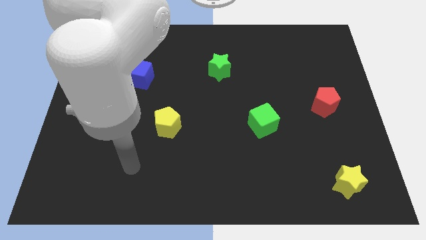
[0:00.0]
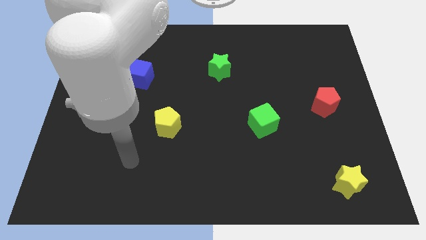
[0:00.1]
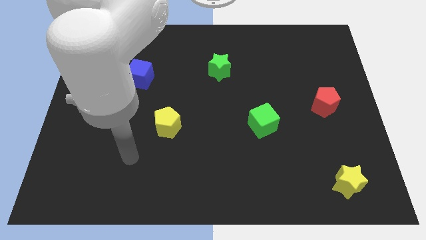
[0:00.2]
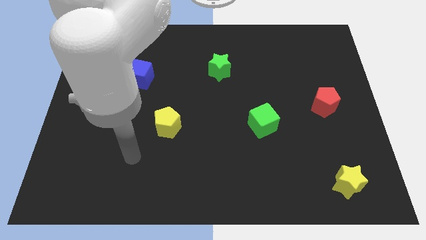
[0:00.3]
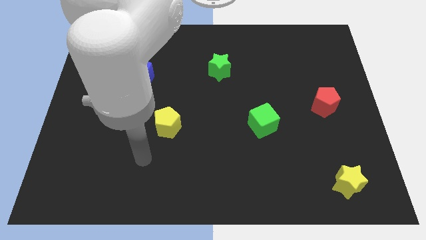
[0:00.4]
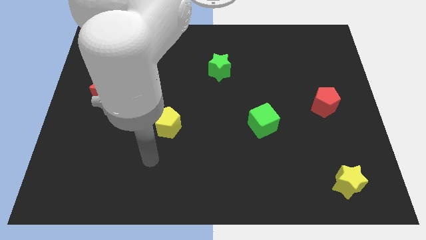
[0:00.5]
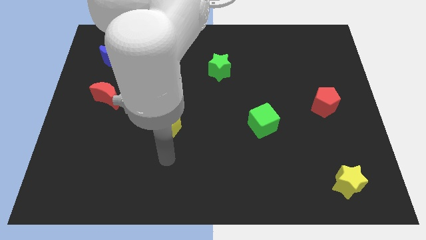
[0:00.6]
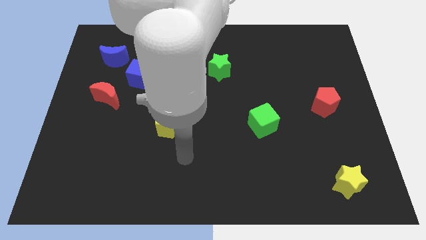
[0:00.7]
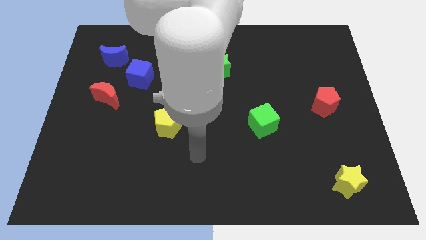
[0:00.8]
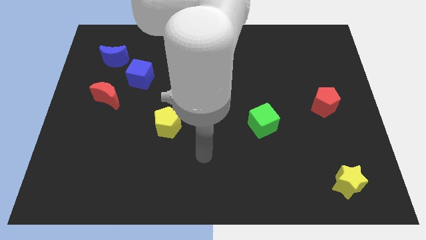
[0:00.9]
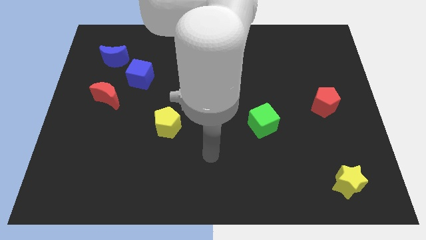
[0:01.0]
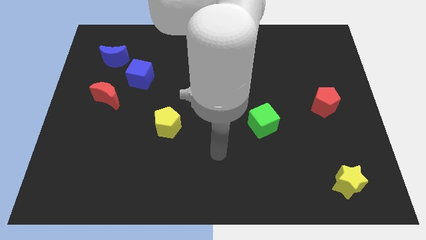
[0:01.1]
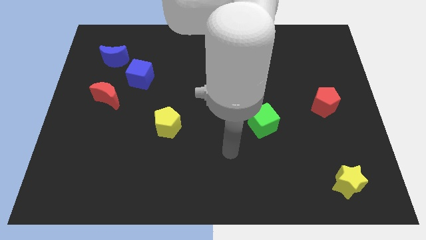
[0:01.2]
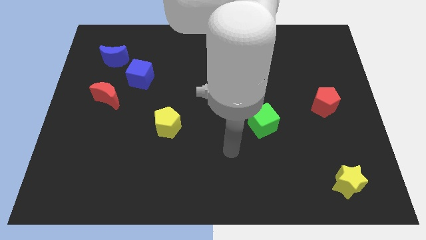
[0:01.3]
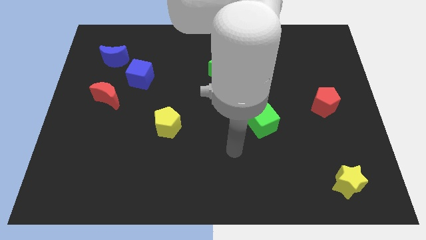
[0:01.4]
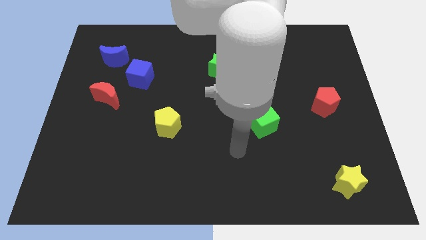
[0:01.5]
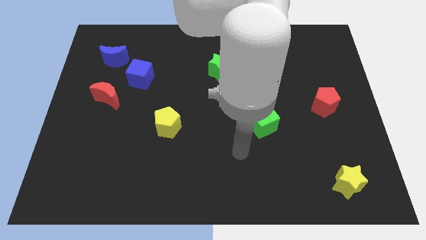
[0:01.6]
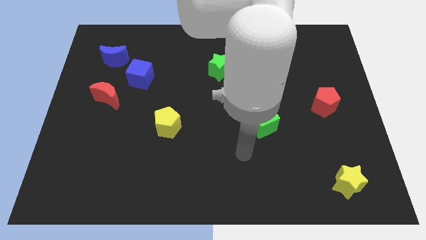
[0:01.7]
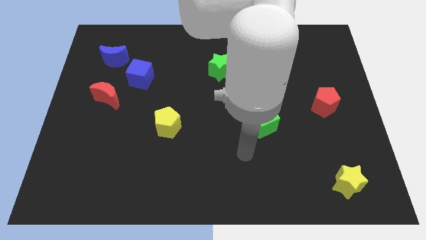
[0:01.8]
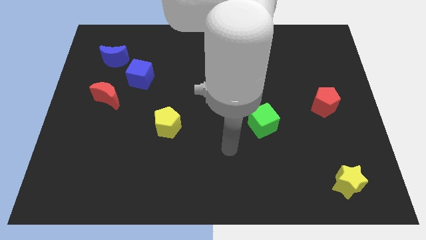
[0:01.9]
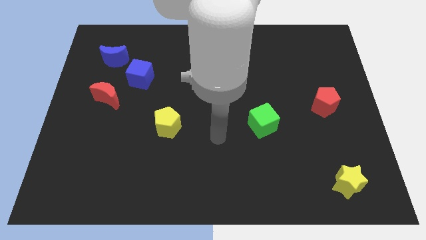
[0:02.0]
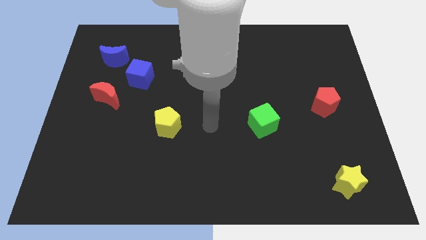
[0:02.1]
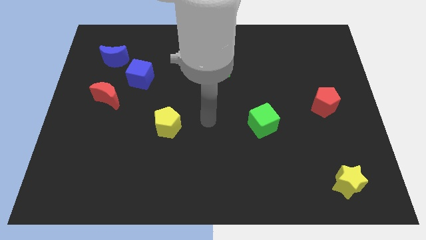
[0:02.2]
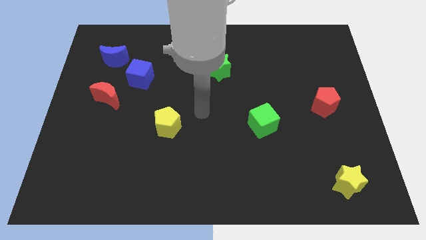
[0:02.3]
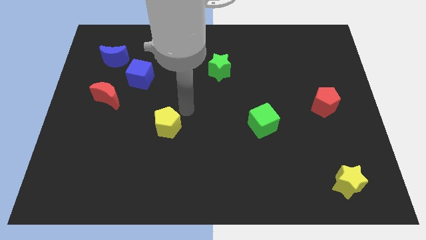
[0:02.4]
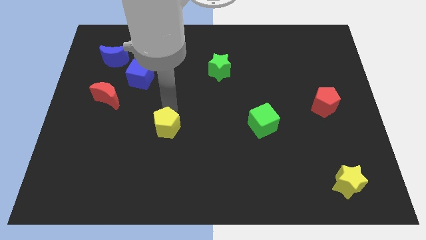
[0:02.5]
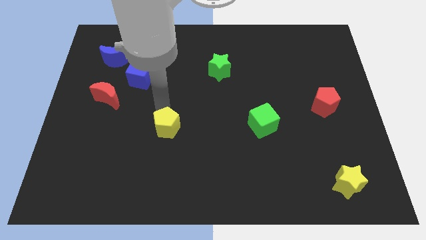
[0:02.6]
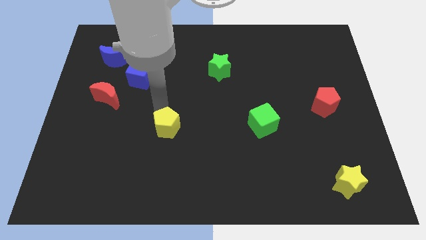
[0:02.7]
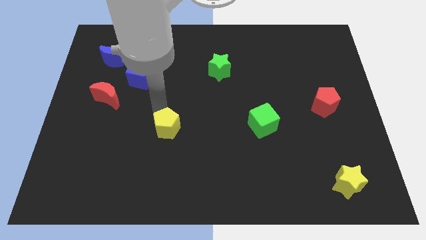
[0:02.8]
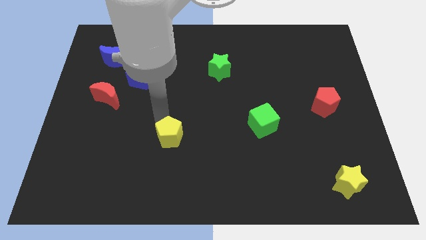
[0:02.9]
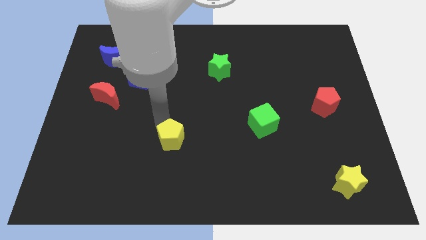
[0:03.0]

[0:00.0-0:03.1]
move the yellow pentagon slightly downwards

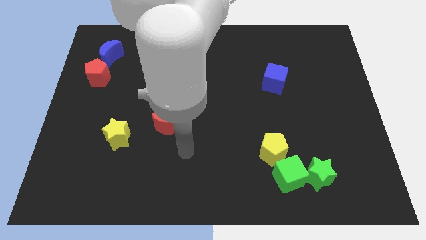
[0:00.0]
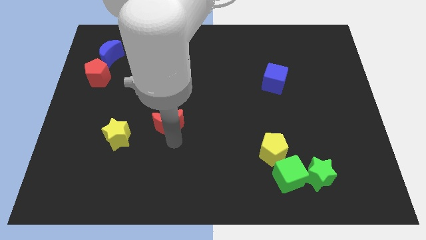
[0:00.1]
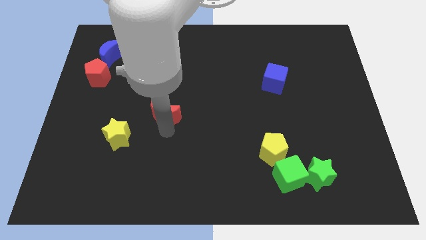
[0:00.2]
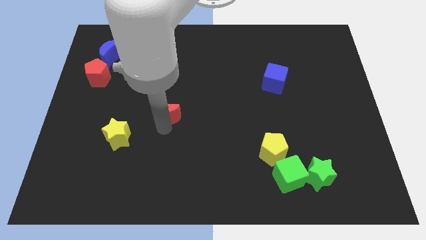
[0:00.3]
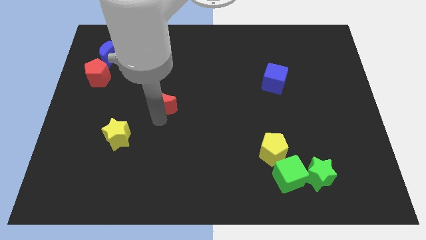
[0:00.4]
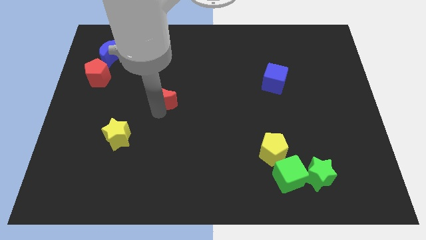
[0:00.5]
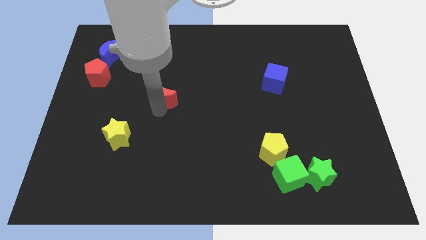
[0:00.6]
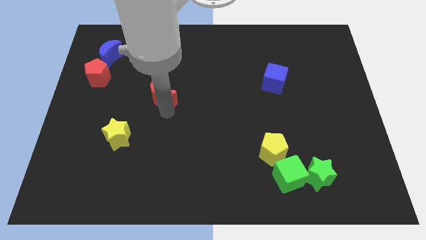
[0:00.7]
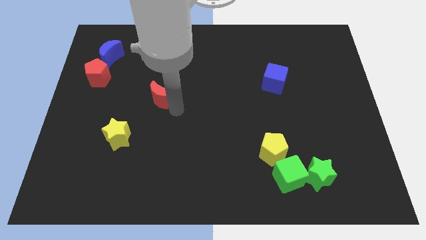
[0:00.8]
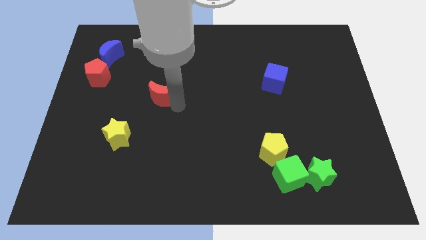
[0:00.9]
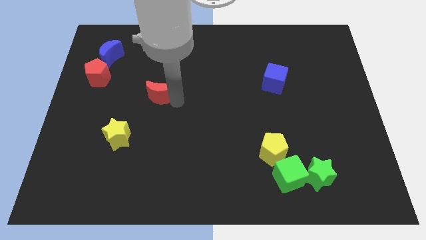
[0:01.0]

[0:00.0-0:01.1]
slide red moon slightly upward

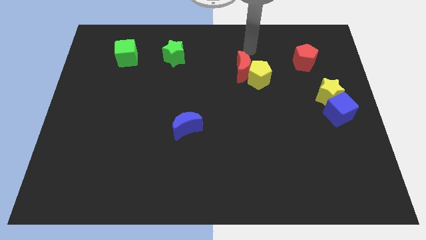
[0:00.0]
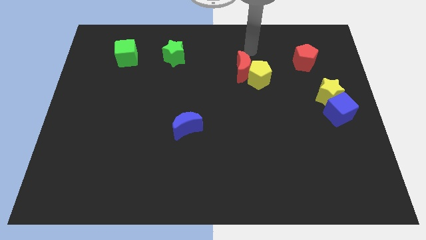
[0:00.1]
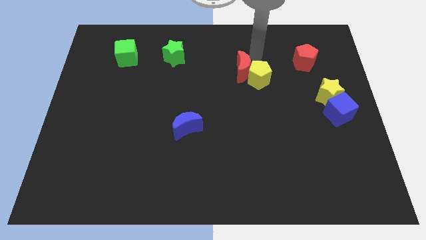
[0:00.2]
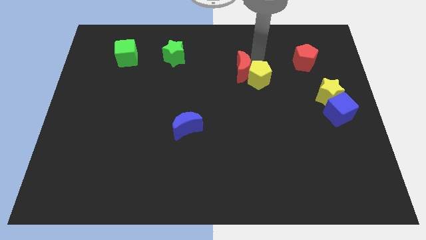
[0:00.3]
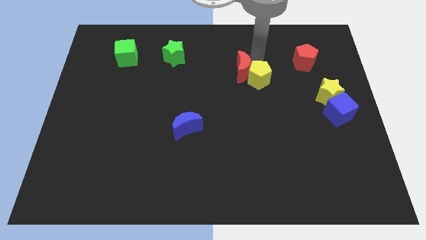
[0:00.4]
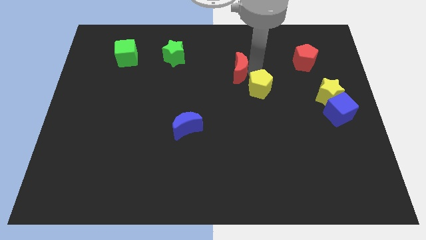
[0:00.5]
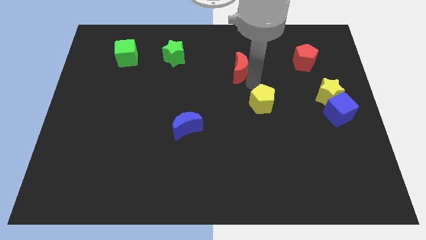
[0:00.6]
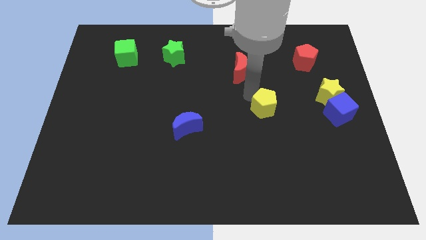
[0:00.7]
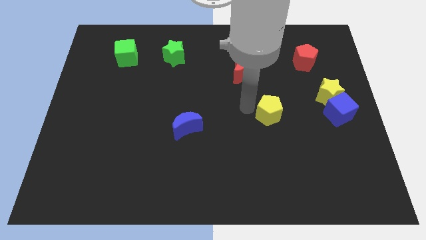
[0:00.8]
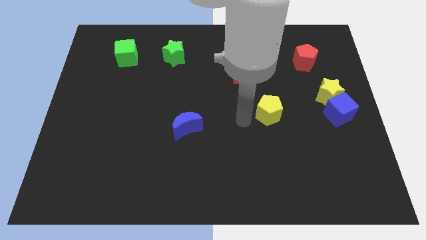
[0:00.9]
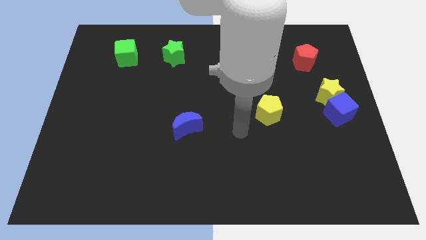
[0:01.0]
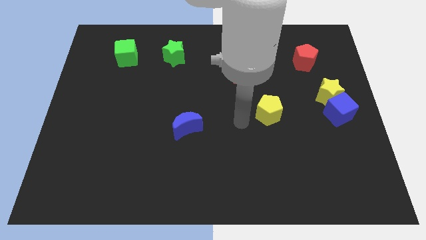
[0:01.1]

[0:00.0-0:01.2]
place the yellow pentagon to the left of the blue cube

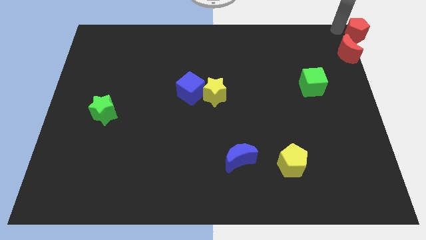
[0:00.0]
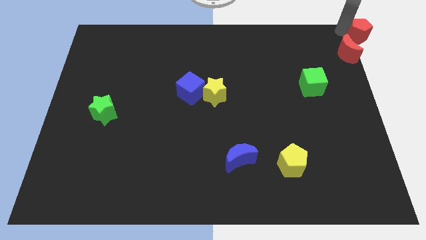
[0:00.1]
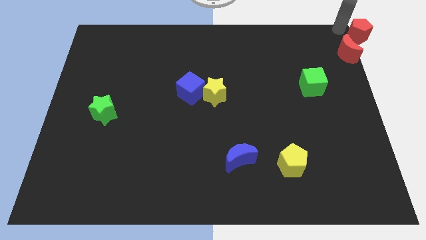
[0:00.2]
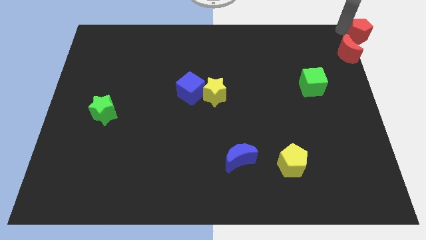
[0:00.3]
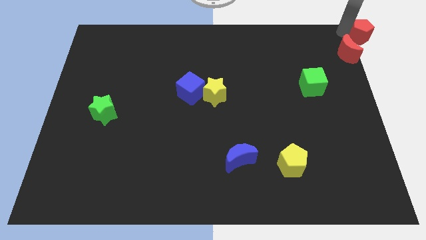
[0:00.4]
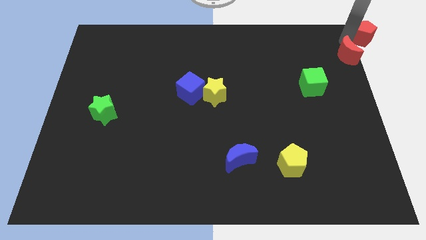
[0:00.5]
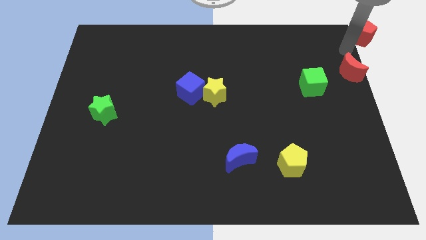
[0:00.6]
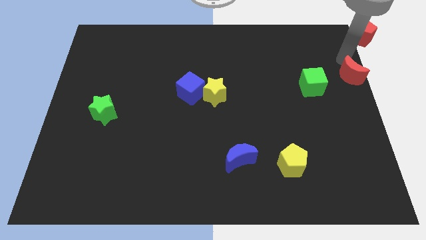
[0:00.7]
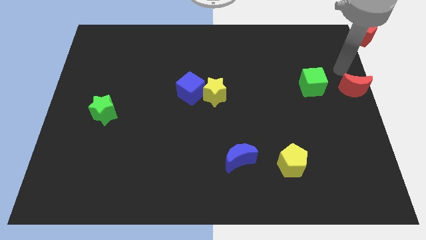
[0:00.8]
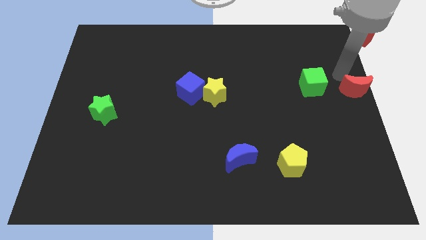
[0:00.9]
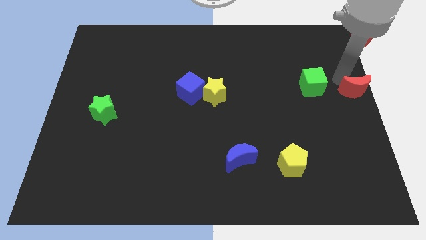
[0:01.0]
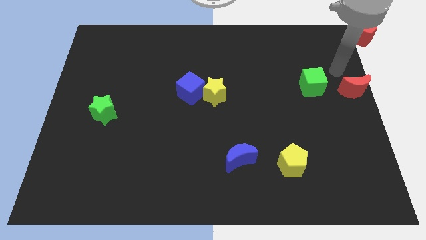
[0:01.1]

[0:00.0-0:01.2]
move the red crescent to the right side of the green cube

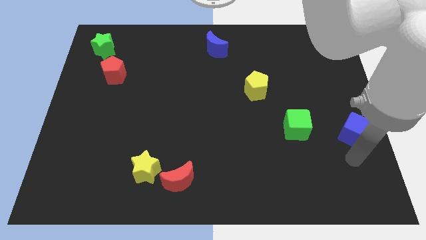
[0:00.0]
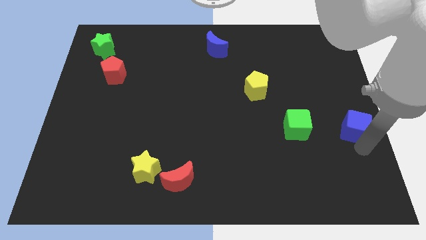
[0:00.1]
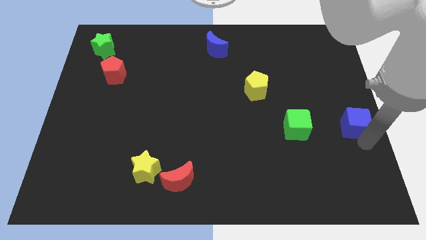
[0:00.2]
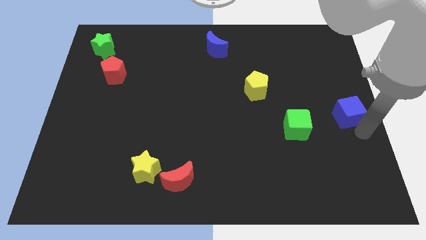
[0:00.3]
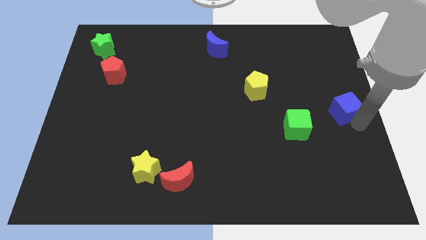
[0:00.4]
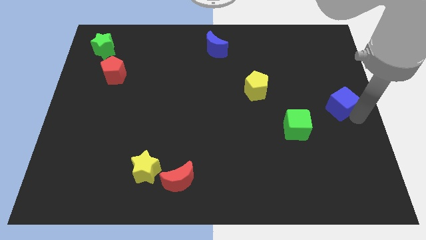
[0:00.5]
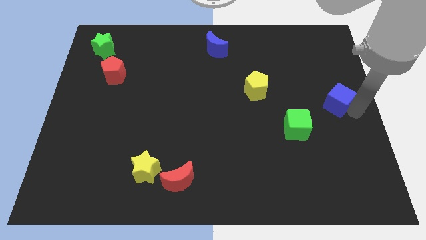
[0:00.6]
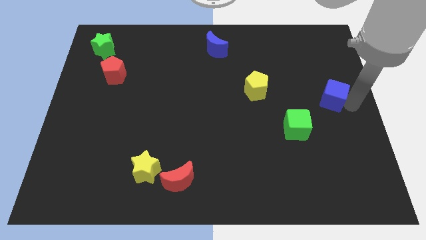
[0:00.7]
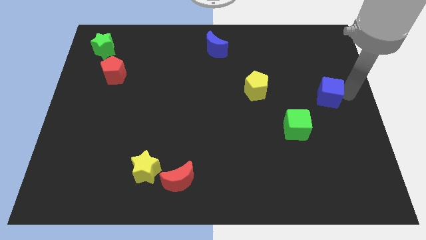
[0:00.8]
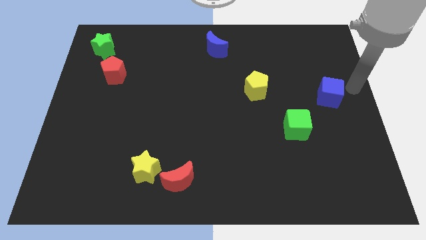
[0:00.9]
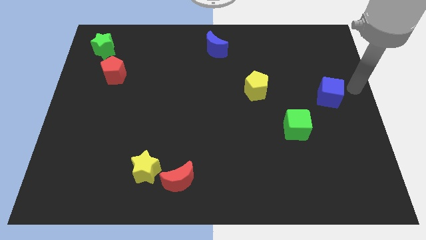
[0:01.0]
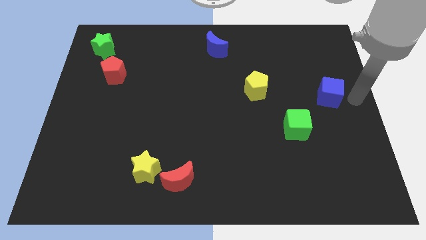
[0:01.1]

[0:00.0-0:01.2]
move blue cube upwards

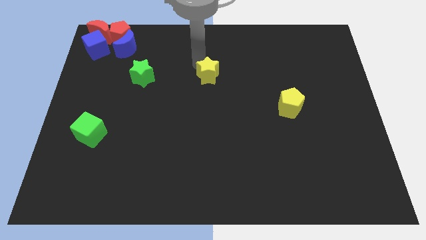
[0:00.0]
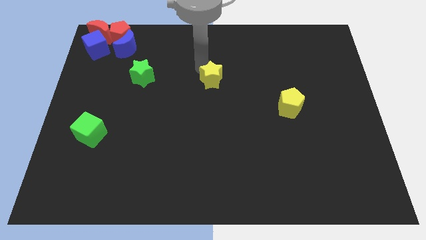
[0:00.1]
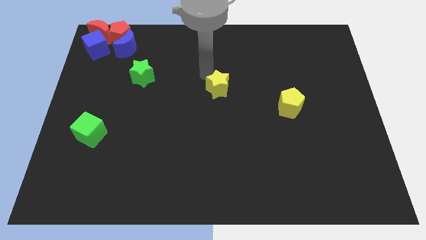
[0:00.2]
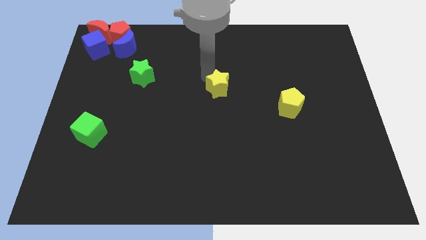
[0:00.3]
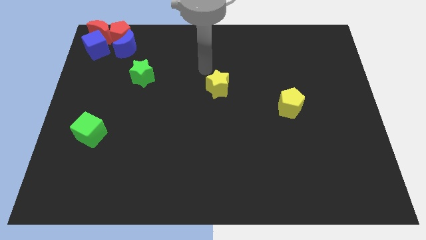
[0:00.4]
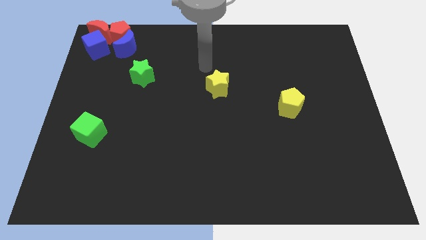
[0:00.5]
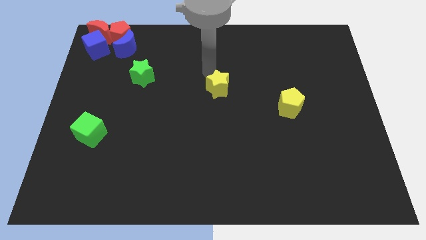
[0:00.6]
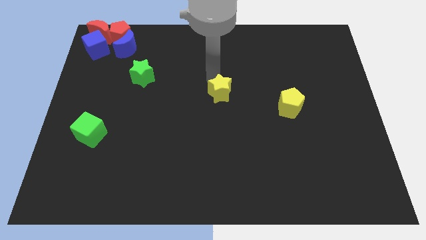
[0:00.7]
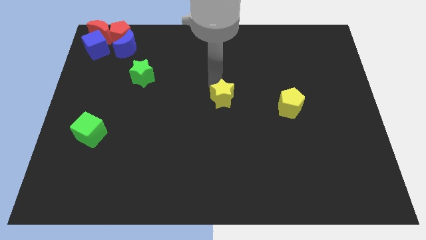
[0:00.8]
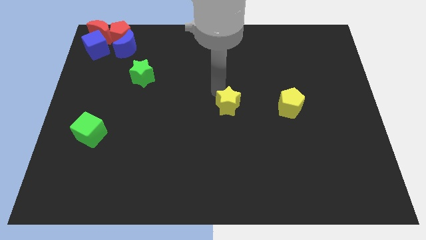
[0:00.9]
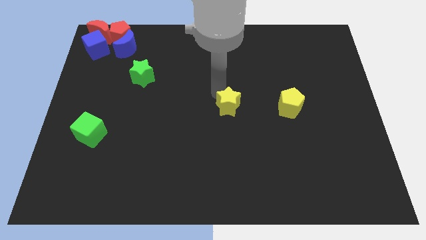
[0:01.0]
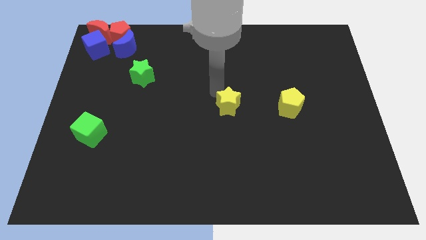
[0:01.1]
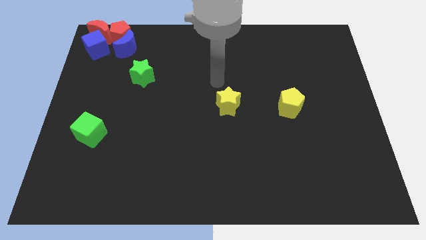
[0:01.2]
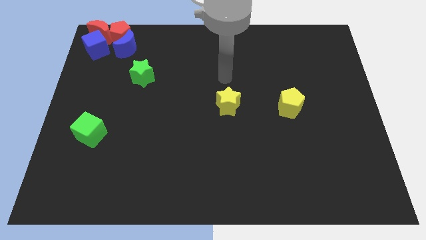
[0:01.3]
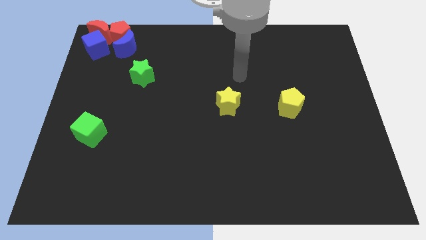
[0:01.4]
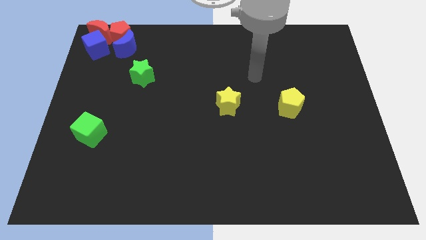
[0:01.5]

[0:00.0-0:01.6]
place the yellow star at center of the board
